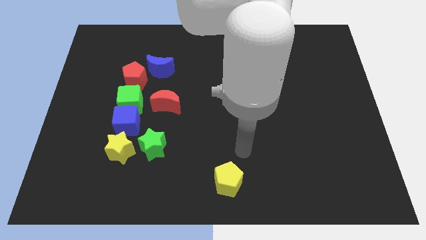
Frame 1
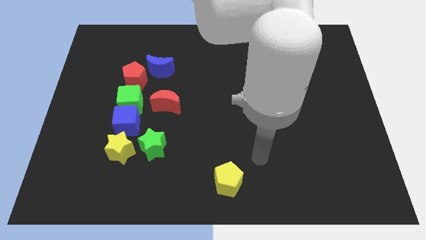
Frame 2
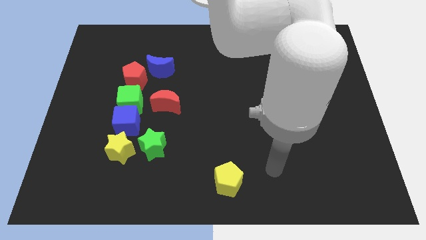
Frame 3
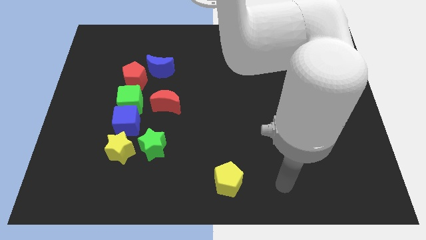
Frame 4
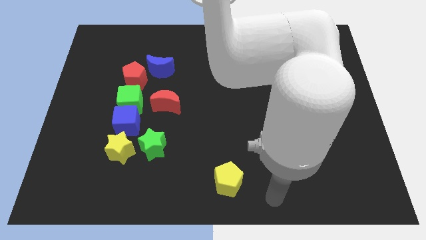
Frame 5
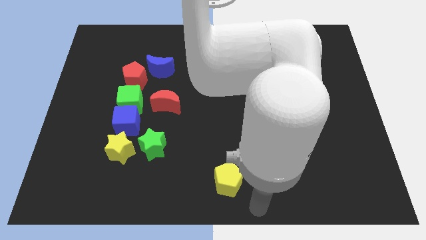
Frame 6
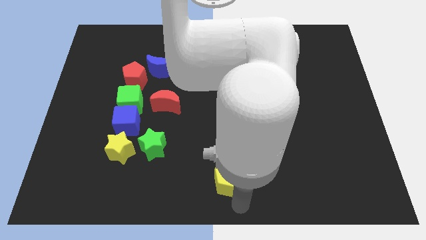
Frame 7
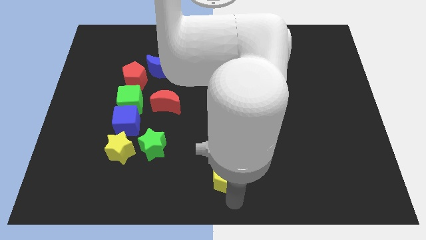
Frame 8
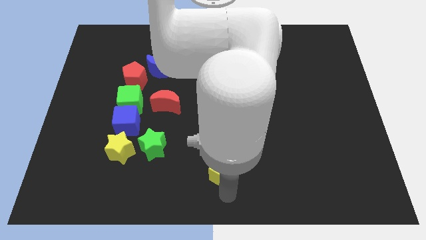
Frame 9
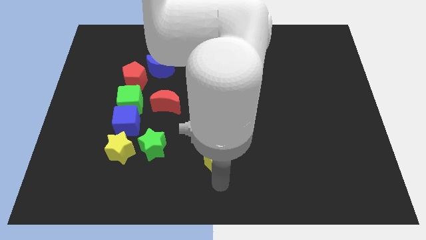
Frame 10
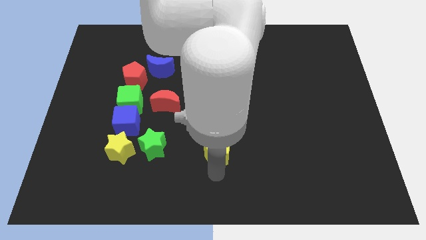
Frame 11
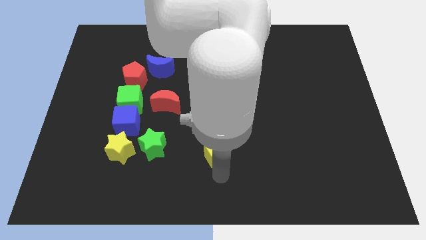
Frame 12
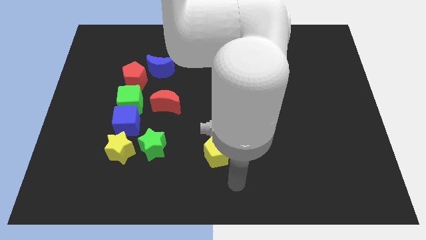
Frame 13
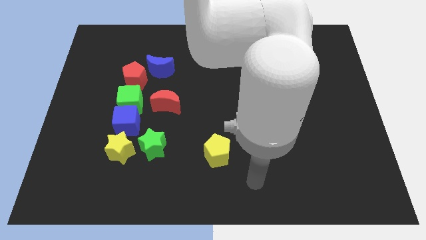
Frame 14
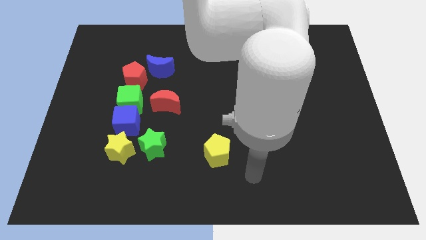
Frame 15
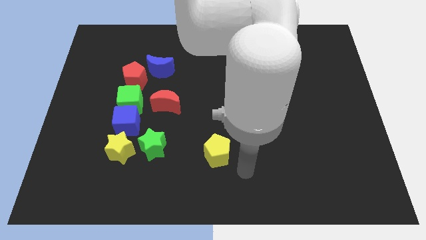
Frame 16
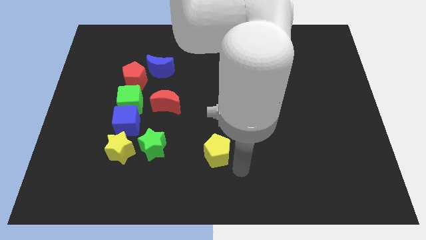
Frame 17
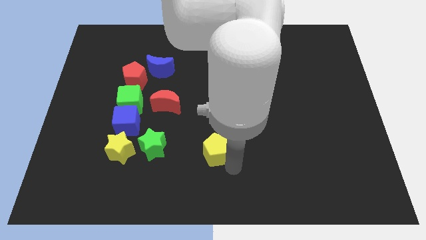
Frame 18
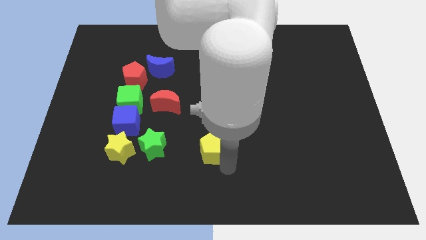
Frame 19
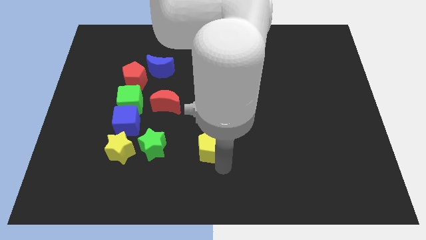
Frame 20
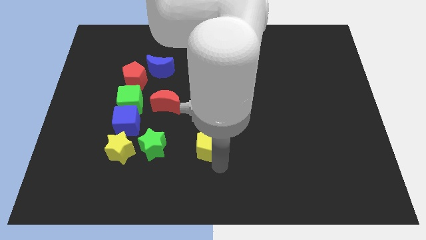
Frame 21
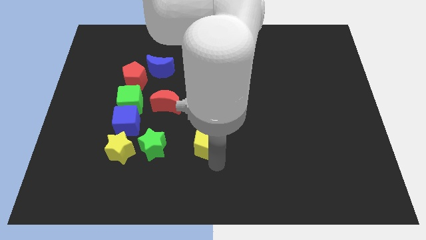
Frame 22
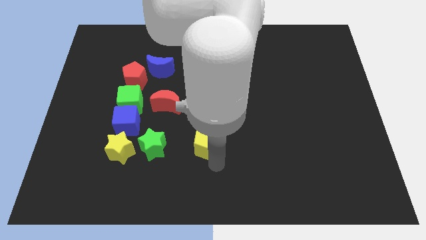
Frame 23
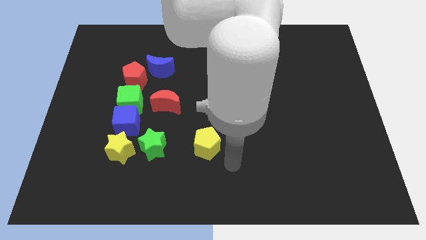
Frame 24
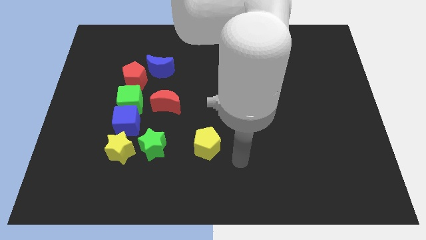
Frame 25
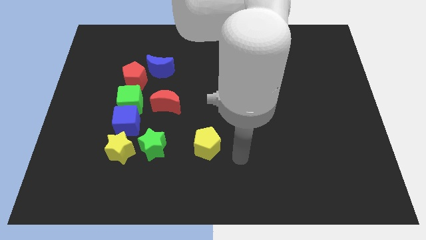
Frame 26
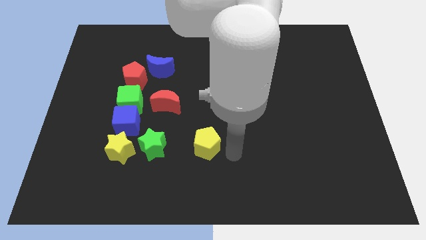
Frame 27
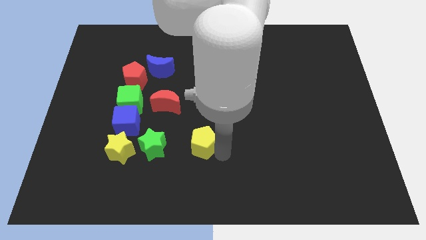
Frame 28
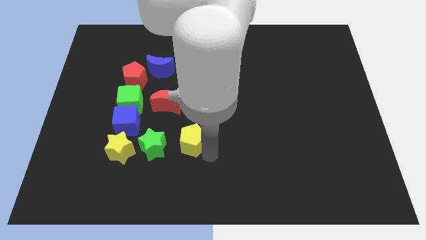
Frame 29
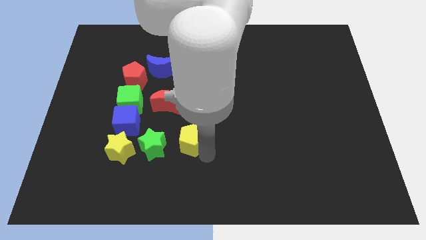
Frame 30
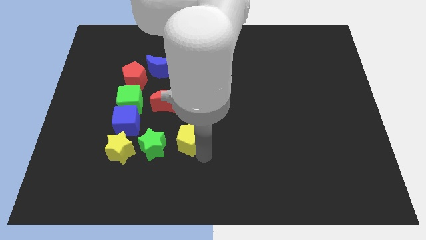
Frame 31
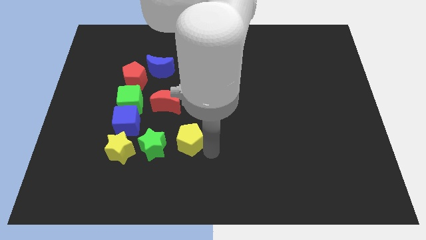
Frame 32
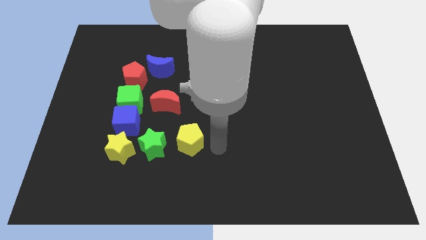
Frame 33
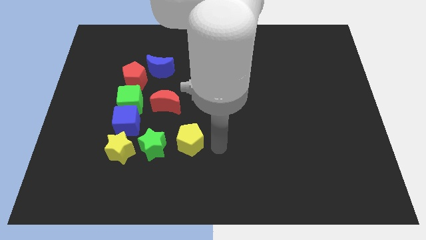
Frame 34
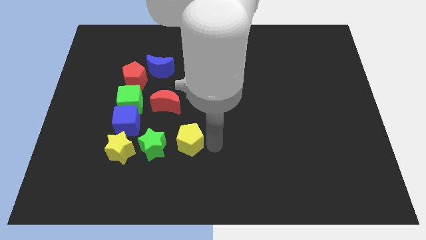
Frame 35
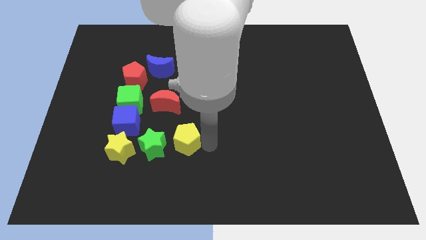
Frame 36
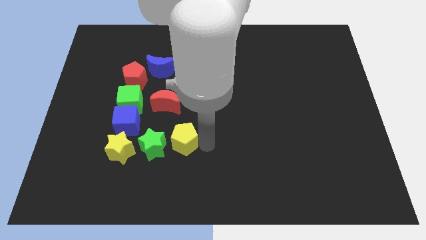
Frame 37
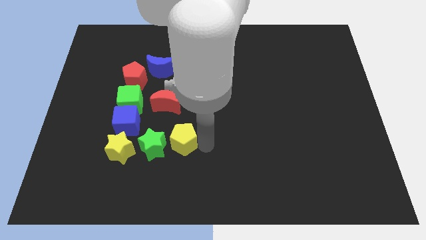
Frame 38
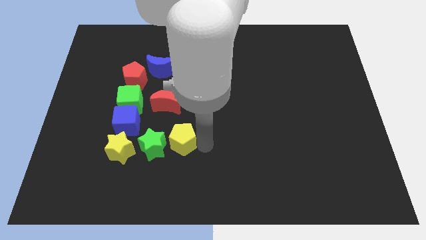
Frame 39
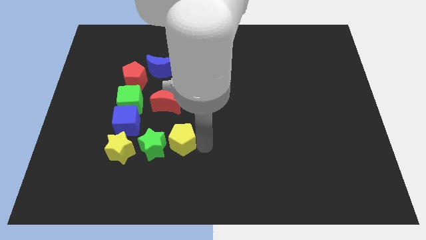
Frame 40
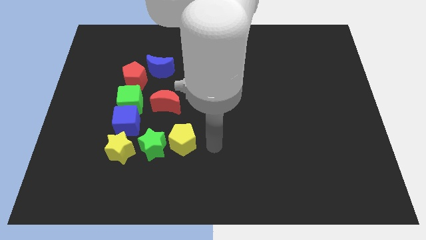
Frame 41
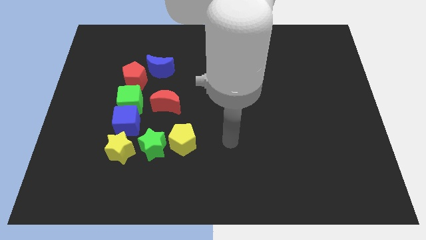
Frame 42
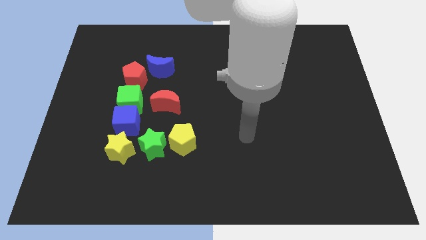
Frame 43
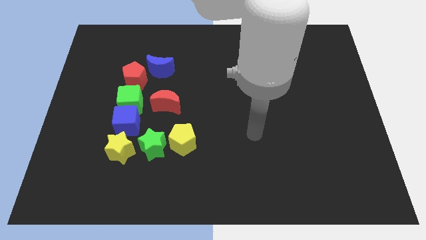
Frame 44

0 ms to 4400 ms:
move the yellow pentagon to the right of the green star

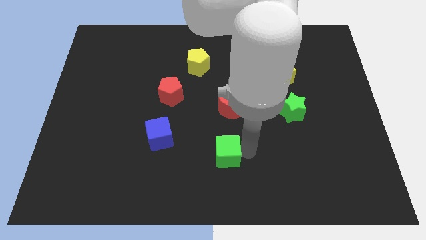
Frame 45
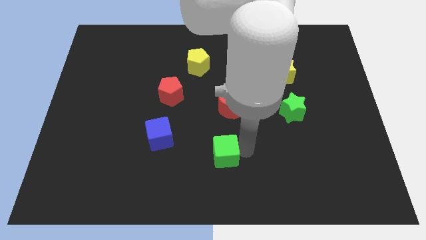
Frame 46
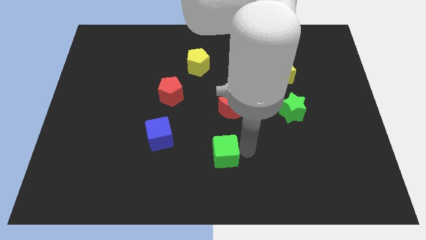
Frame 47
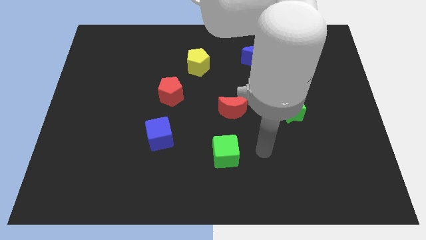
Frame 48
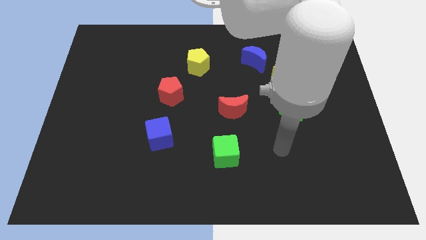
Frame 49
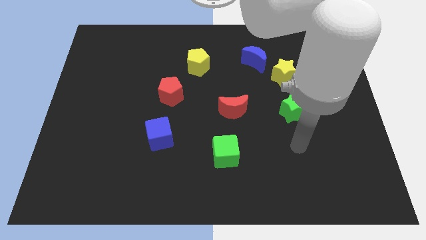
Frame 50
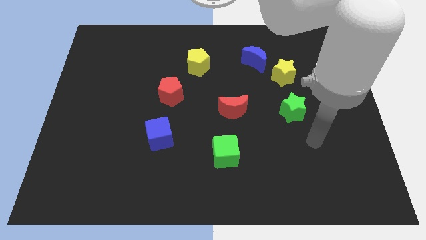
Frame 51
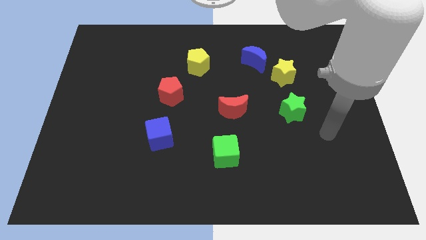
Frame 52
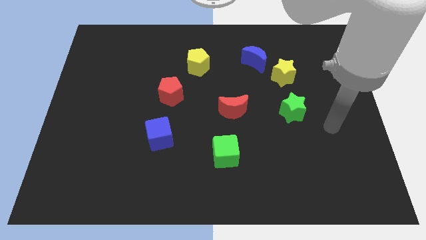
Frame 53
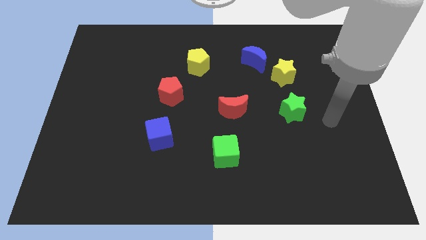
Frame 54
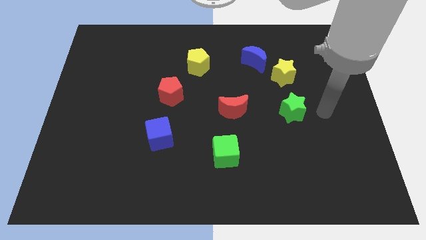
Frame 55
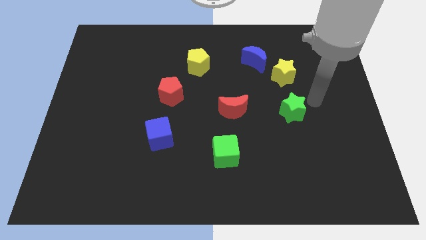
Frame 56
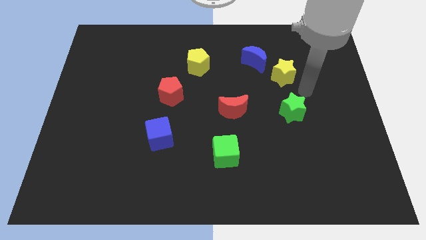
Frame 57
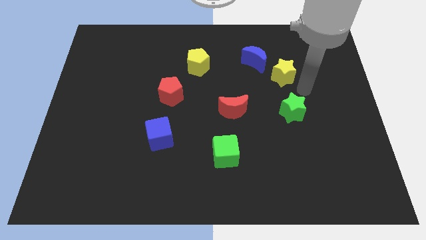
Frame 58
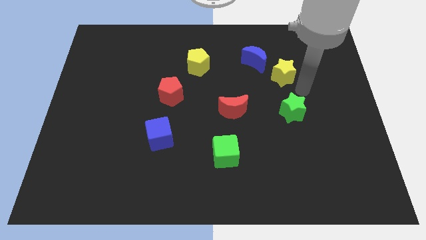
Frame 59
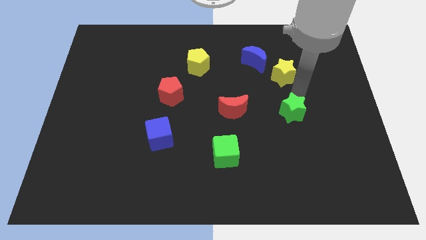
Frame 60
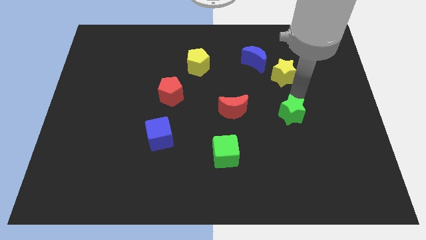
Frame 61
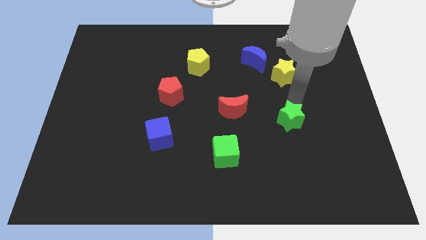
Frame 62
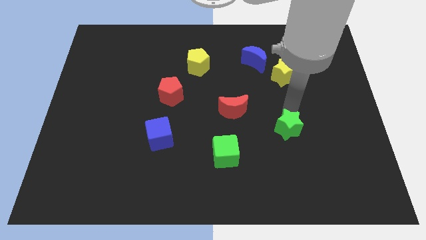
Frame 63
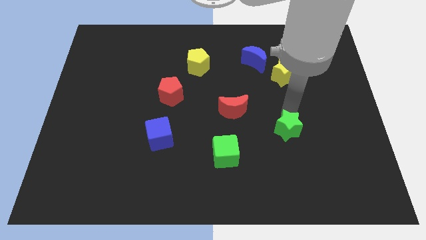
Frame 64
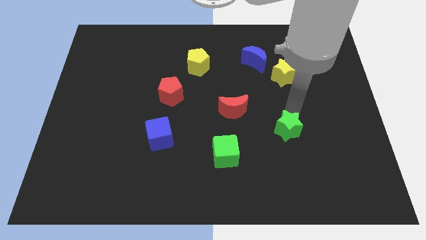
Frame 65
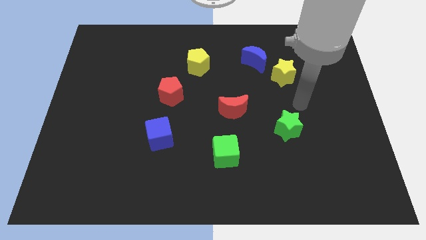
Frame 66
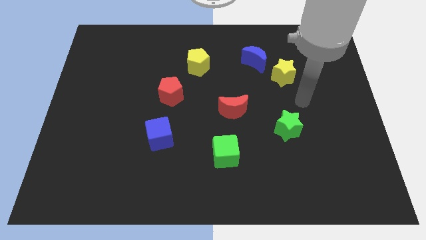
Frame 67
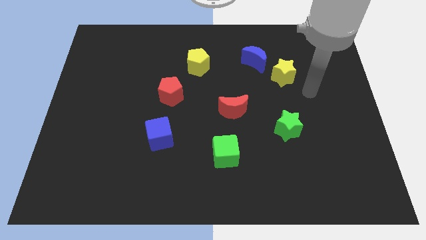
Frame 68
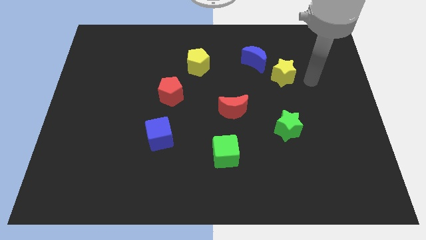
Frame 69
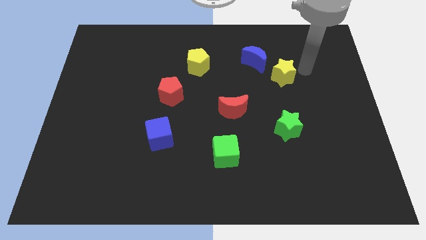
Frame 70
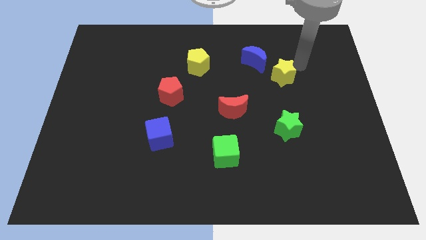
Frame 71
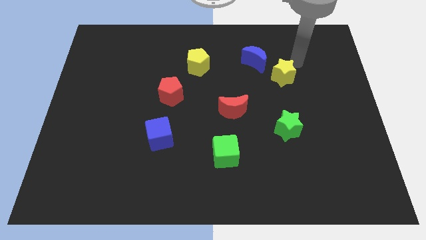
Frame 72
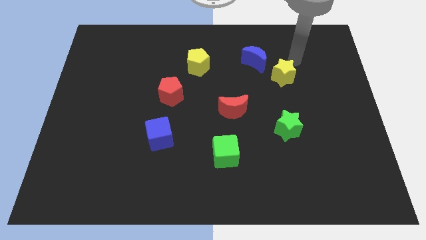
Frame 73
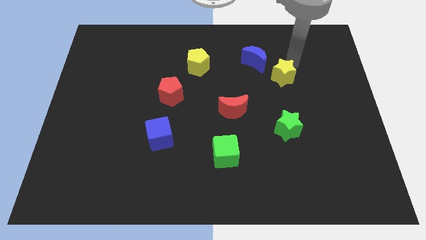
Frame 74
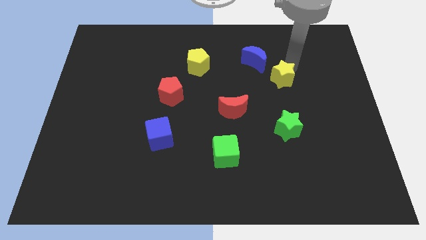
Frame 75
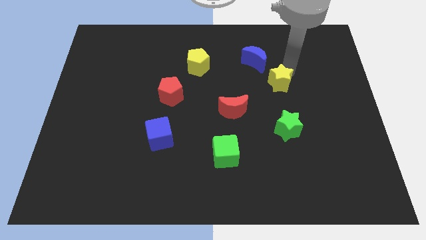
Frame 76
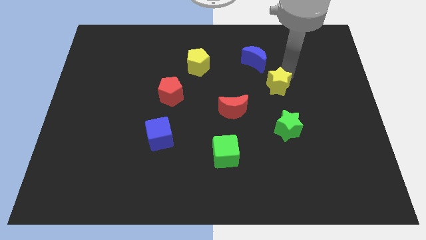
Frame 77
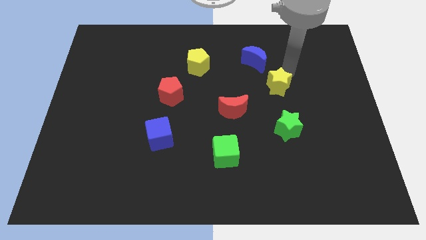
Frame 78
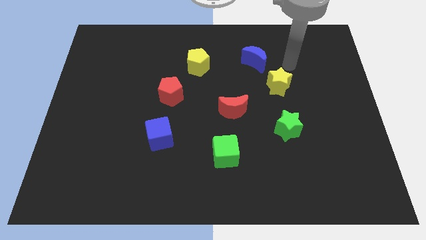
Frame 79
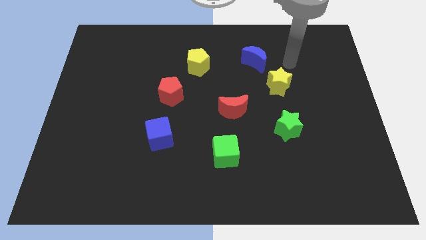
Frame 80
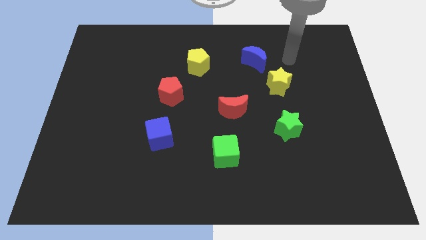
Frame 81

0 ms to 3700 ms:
push the green and yellow star towards the left side

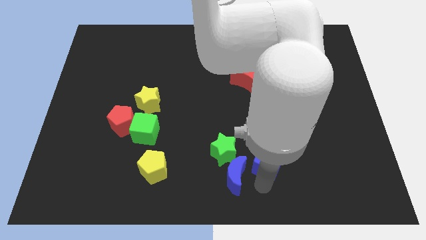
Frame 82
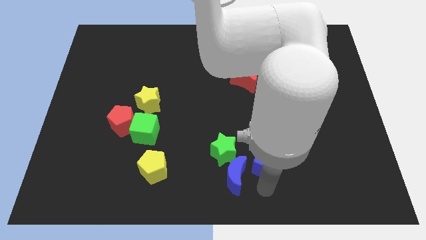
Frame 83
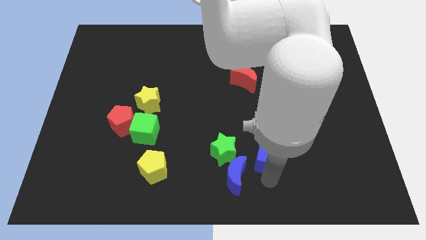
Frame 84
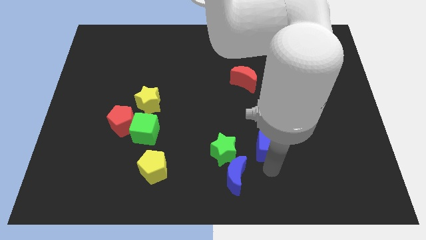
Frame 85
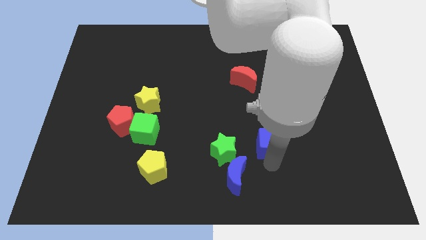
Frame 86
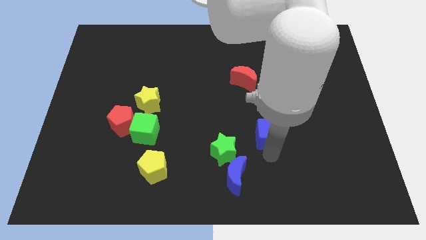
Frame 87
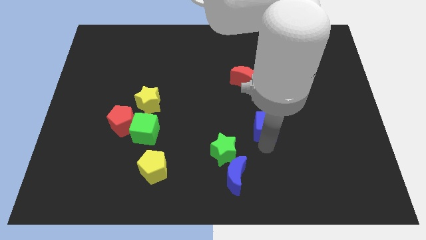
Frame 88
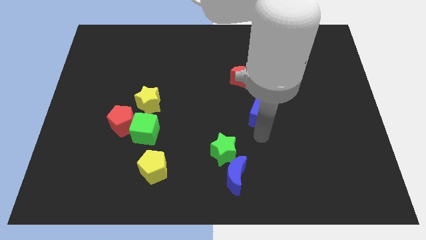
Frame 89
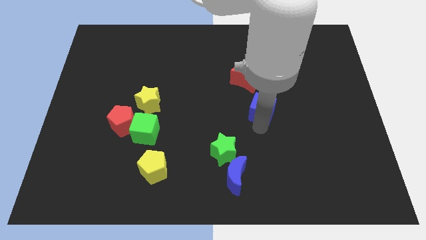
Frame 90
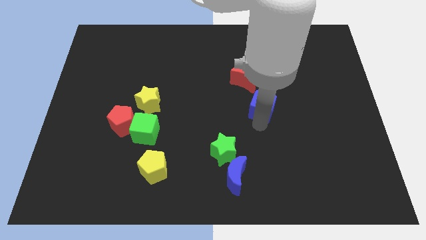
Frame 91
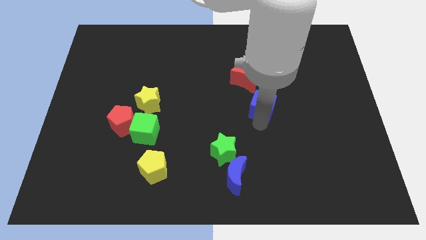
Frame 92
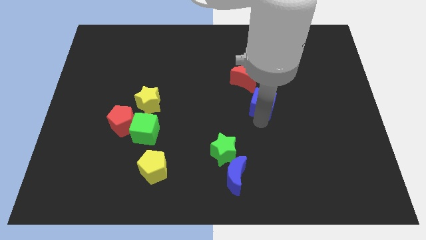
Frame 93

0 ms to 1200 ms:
place blue cube to the bottom right of red moon
